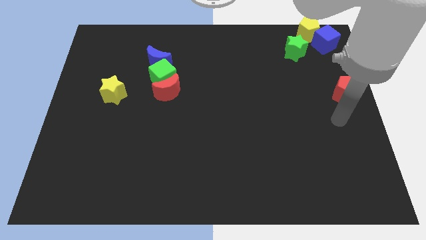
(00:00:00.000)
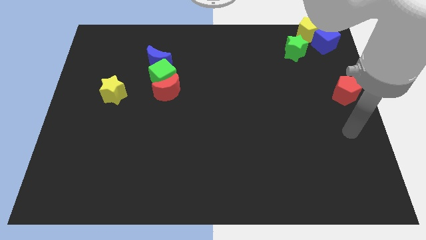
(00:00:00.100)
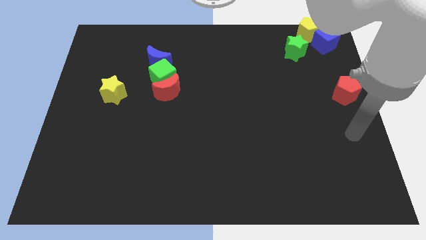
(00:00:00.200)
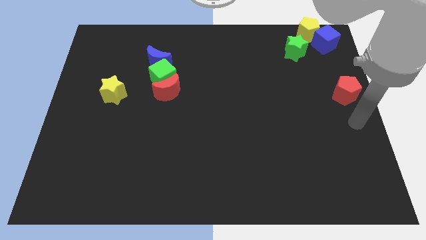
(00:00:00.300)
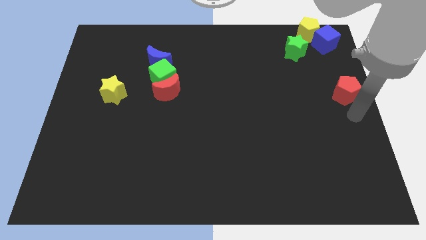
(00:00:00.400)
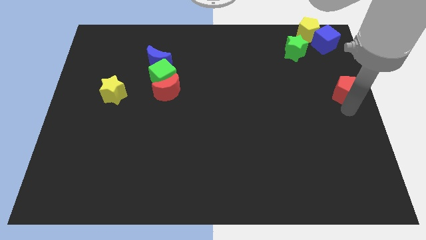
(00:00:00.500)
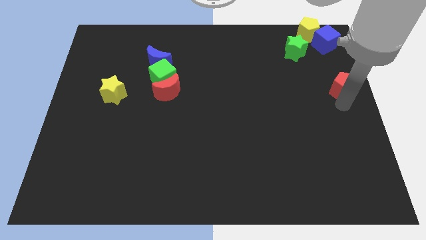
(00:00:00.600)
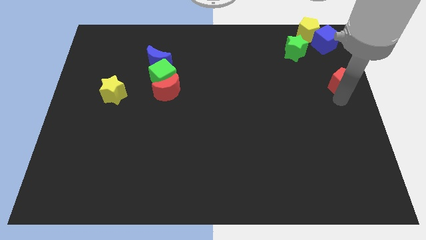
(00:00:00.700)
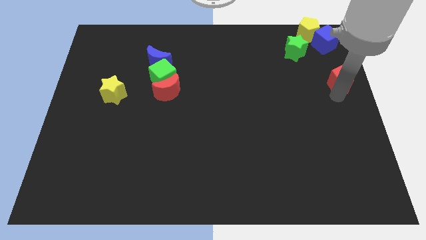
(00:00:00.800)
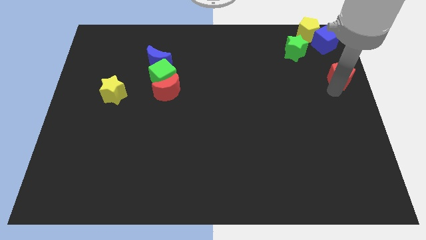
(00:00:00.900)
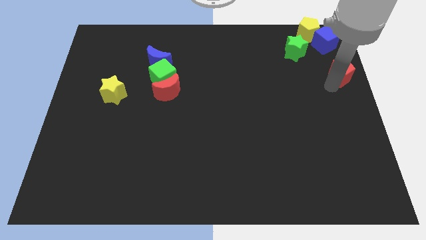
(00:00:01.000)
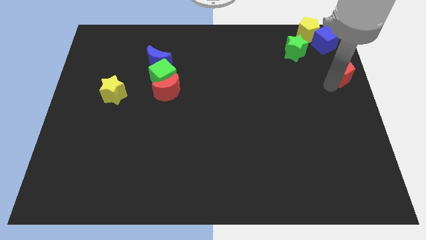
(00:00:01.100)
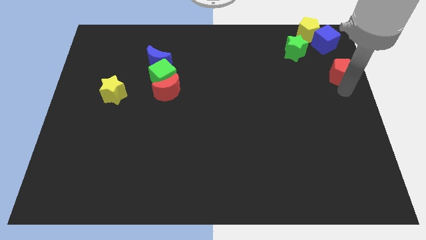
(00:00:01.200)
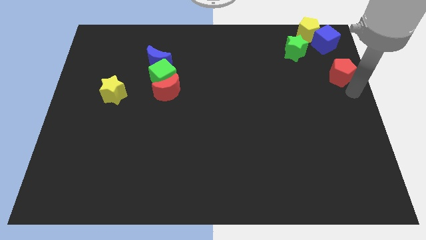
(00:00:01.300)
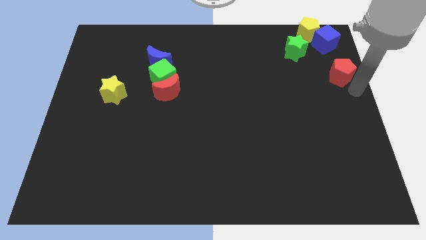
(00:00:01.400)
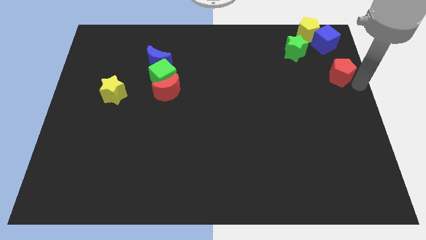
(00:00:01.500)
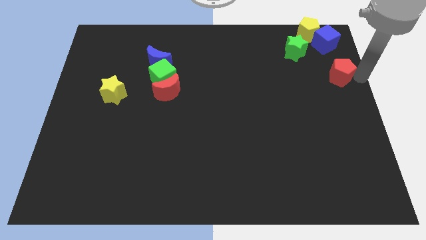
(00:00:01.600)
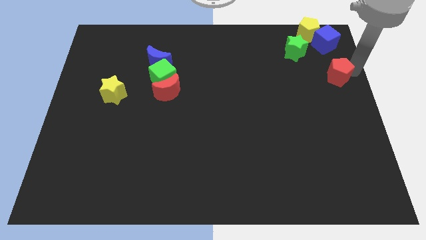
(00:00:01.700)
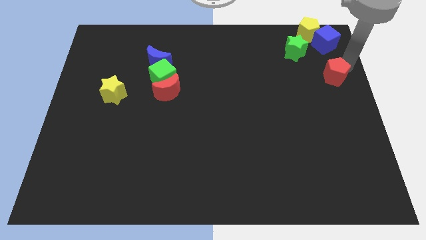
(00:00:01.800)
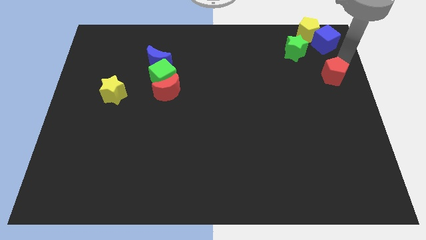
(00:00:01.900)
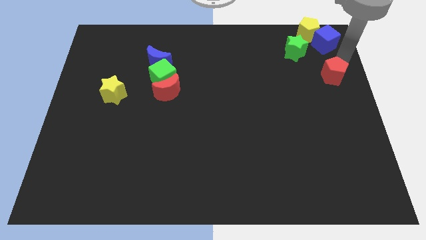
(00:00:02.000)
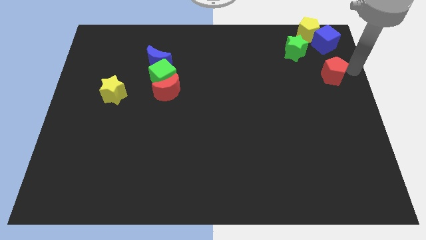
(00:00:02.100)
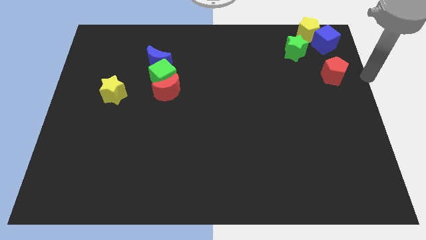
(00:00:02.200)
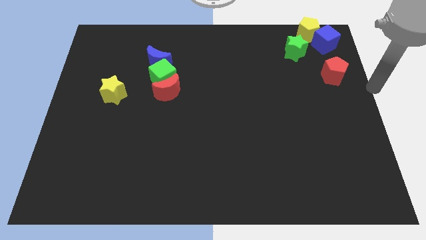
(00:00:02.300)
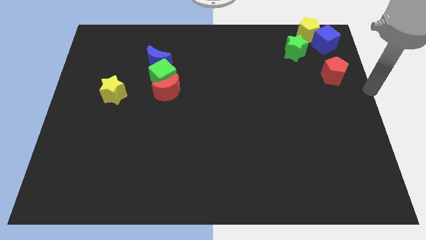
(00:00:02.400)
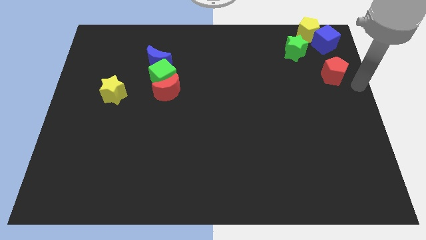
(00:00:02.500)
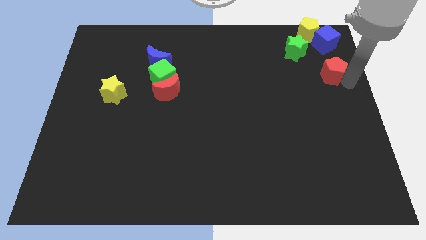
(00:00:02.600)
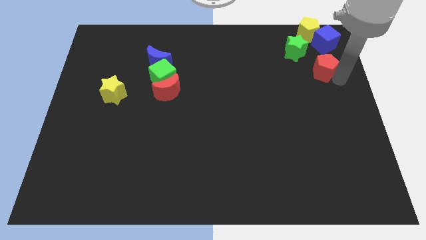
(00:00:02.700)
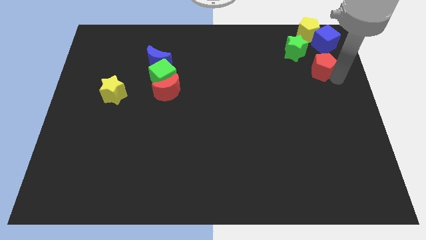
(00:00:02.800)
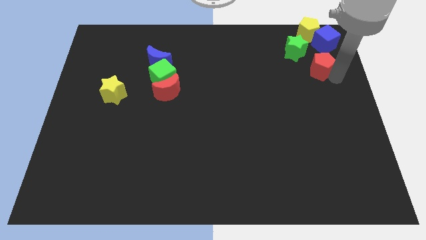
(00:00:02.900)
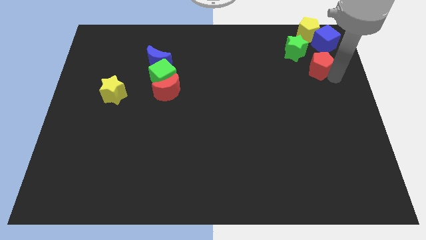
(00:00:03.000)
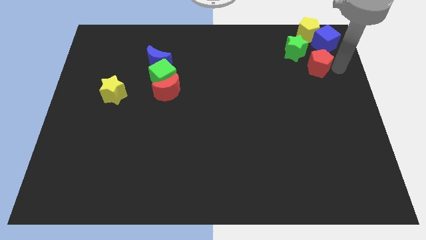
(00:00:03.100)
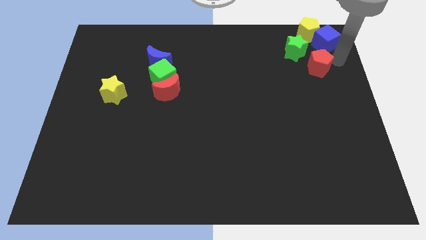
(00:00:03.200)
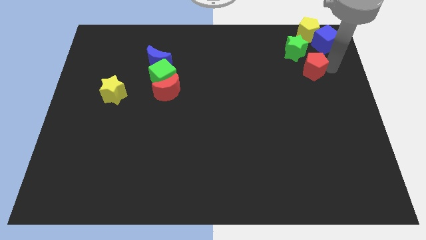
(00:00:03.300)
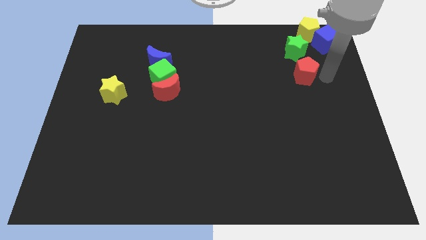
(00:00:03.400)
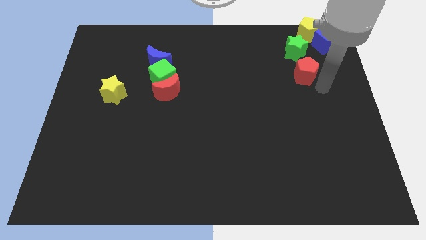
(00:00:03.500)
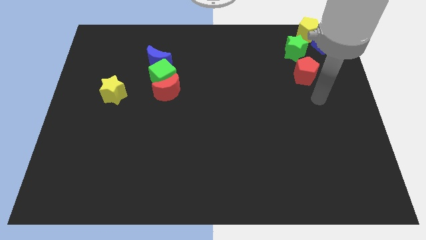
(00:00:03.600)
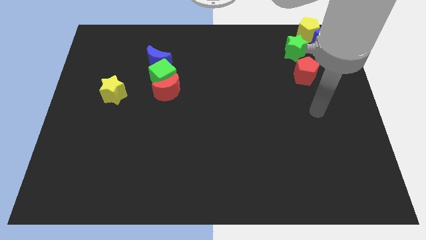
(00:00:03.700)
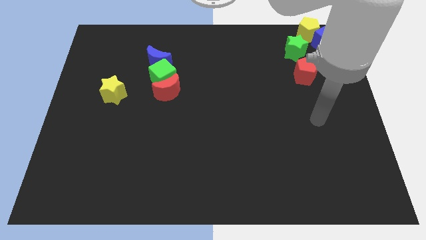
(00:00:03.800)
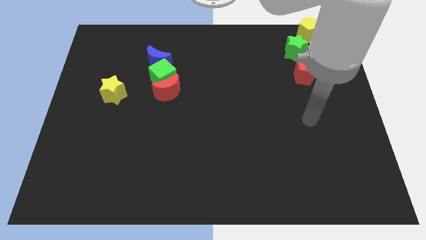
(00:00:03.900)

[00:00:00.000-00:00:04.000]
put the red pentagon below green star

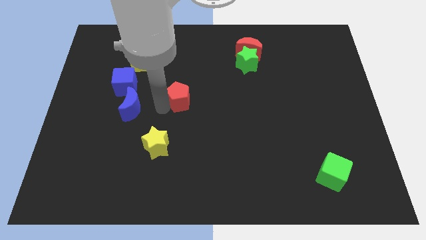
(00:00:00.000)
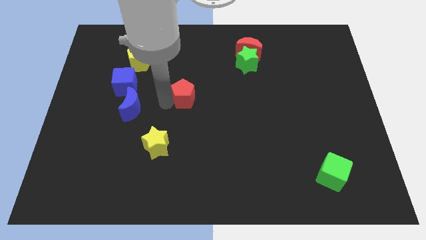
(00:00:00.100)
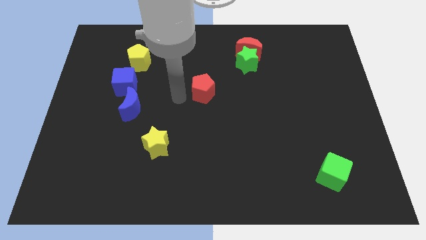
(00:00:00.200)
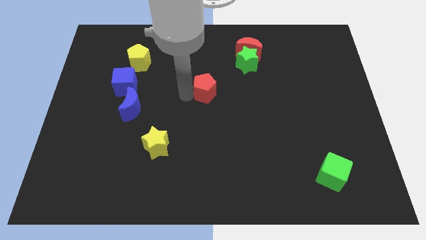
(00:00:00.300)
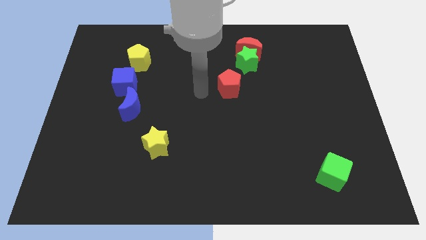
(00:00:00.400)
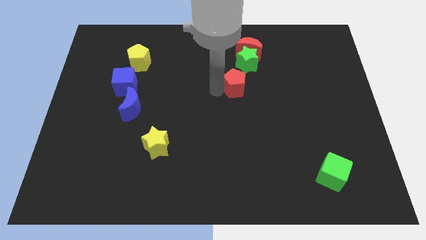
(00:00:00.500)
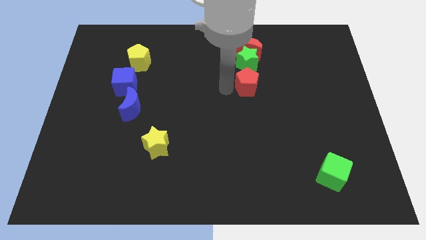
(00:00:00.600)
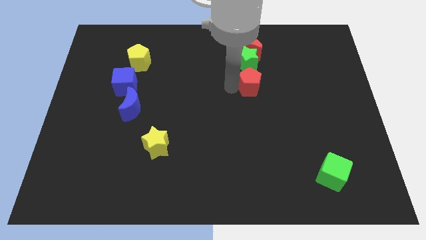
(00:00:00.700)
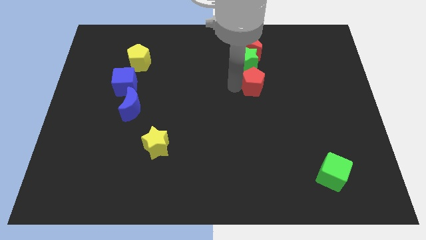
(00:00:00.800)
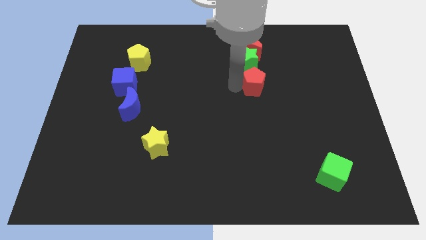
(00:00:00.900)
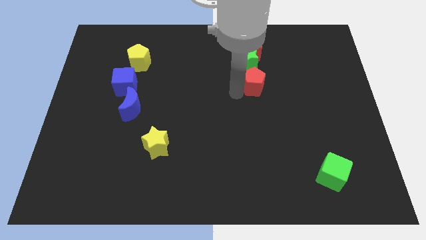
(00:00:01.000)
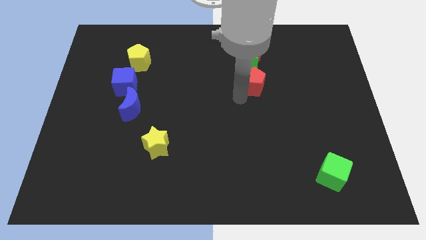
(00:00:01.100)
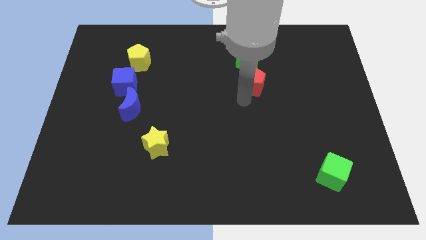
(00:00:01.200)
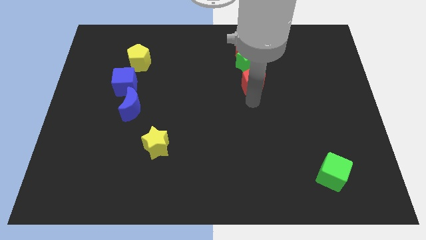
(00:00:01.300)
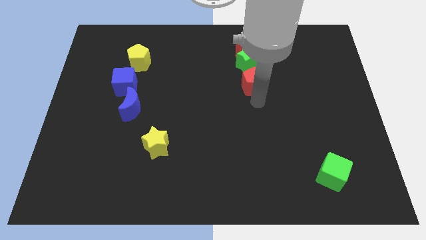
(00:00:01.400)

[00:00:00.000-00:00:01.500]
drag red pentagon down to green star

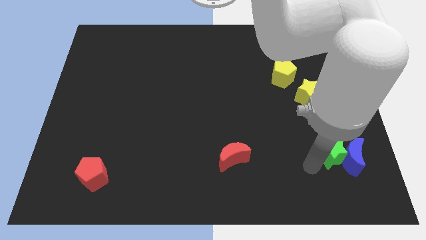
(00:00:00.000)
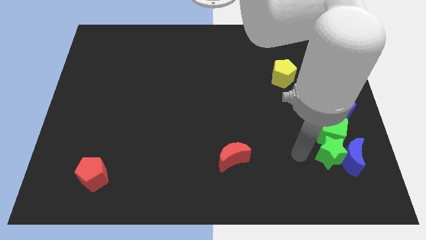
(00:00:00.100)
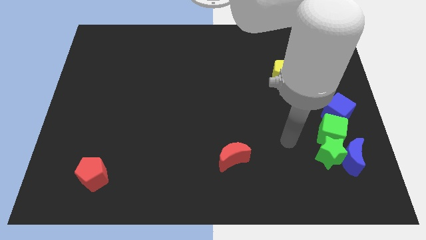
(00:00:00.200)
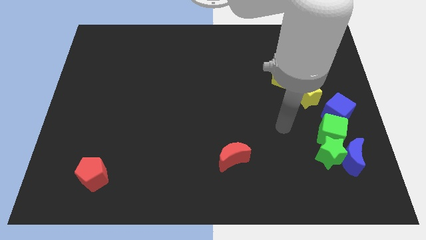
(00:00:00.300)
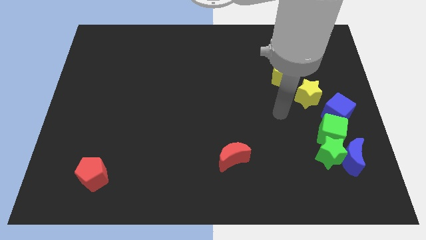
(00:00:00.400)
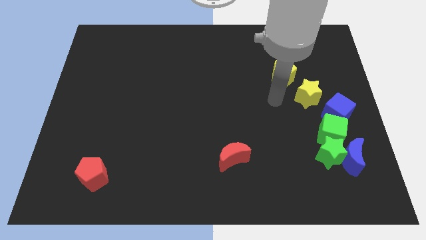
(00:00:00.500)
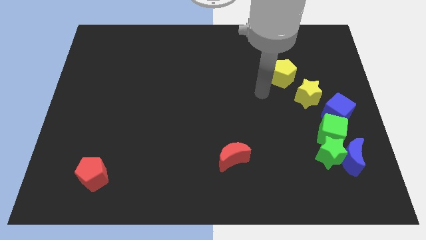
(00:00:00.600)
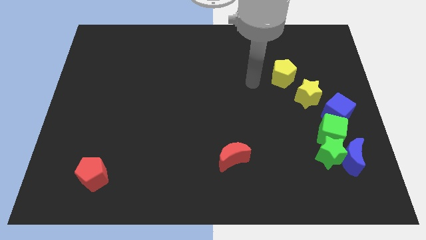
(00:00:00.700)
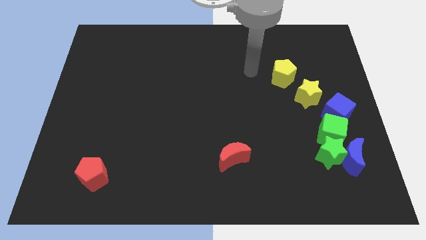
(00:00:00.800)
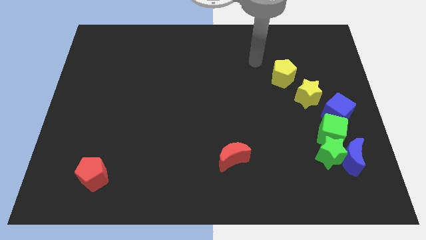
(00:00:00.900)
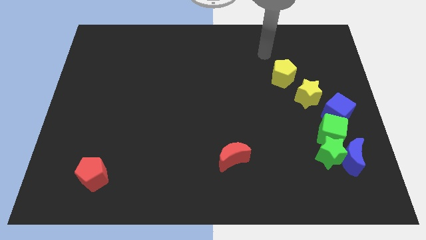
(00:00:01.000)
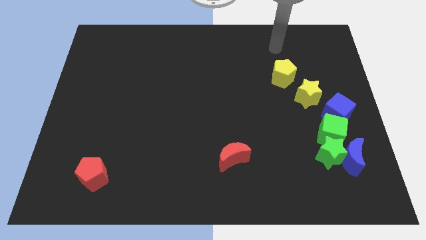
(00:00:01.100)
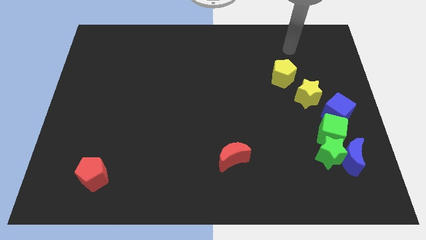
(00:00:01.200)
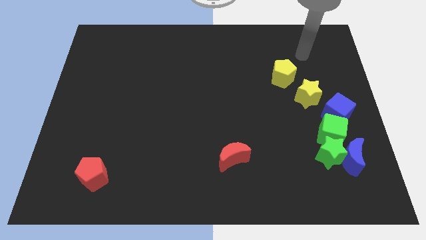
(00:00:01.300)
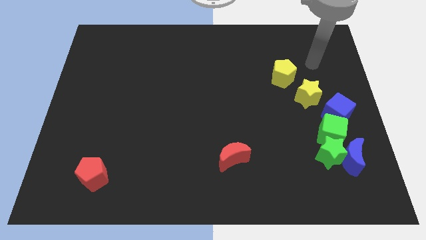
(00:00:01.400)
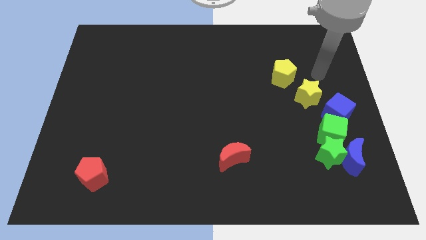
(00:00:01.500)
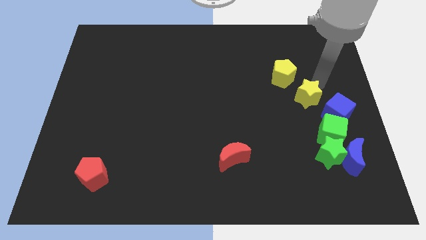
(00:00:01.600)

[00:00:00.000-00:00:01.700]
place your arm at the top right of the yellow star

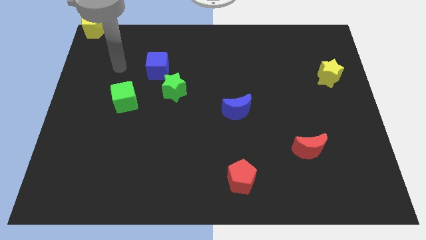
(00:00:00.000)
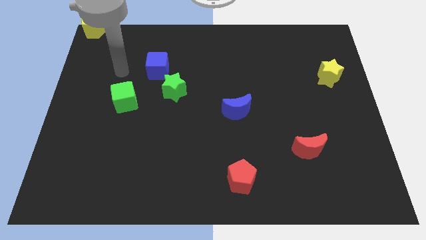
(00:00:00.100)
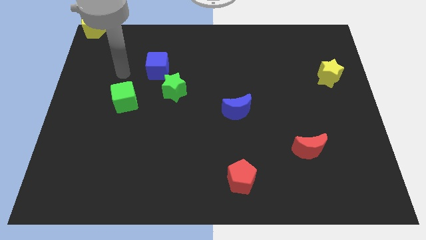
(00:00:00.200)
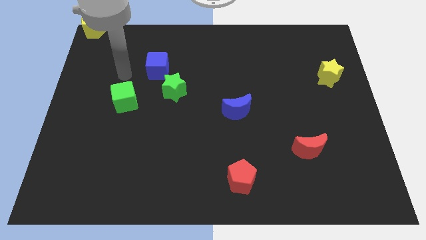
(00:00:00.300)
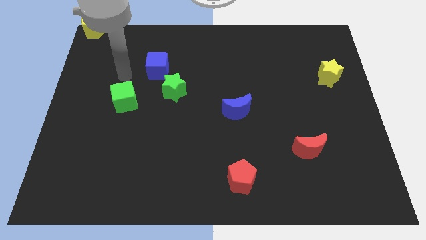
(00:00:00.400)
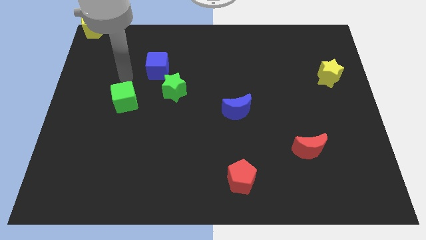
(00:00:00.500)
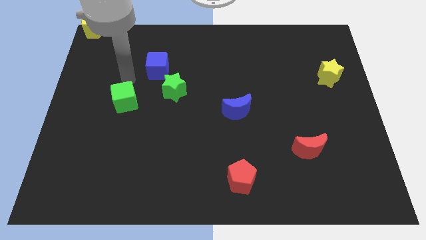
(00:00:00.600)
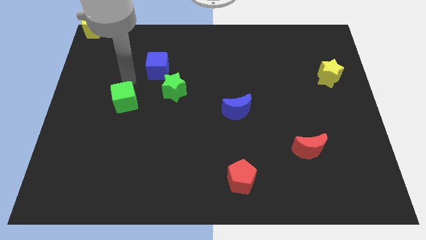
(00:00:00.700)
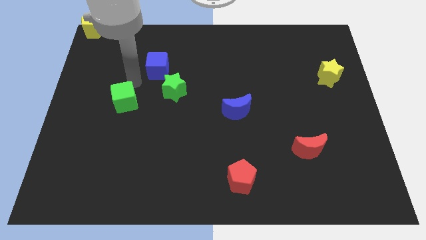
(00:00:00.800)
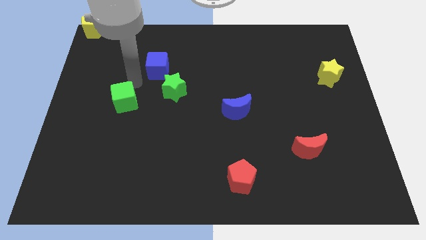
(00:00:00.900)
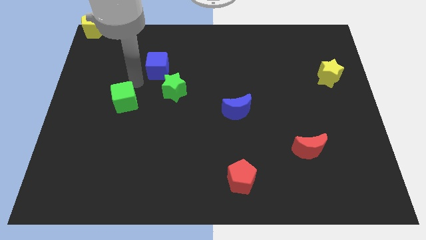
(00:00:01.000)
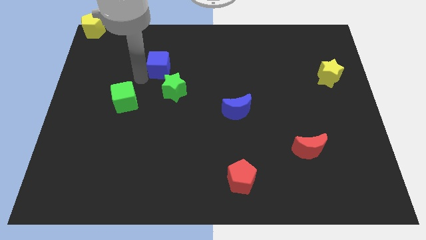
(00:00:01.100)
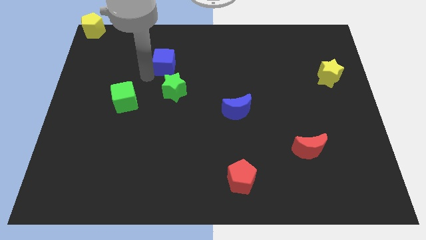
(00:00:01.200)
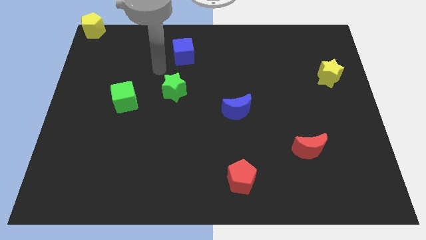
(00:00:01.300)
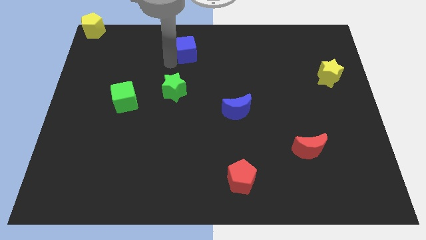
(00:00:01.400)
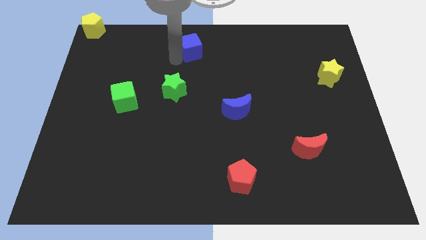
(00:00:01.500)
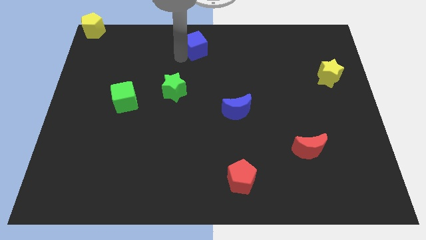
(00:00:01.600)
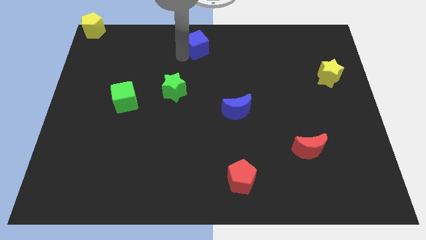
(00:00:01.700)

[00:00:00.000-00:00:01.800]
push the blue cube towards the top center of the board
